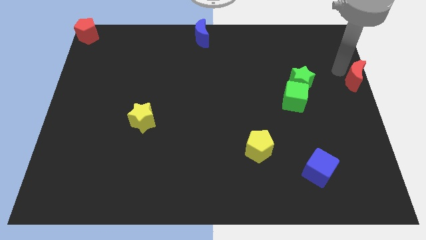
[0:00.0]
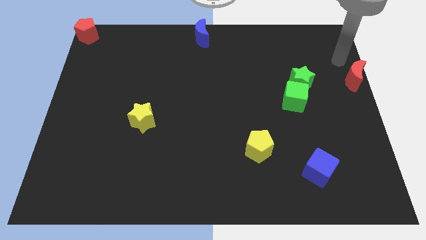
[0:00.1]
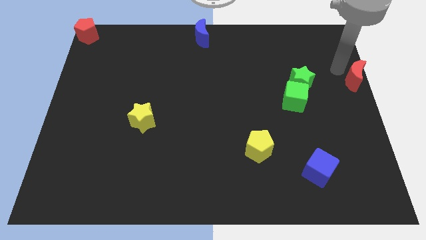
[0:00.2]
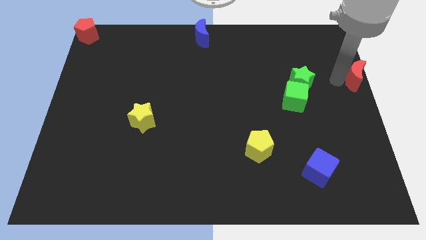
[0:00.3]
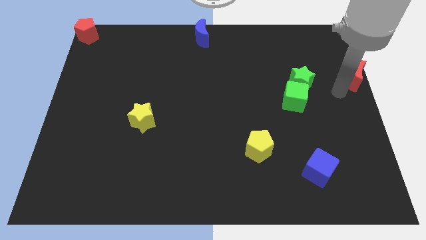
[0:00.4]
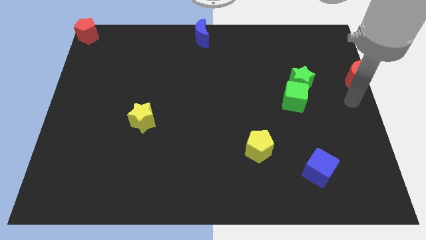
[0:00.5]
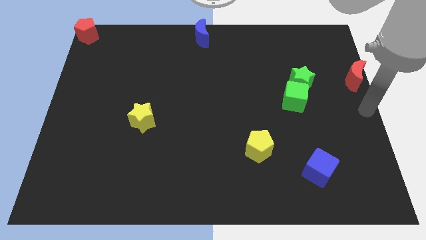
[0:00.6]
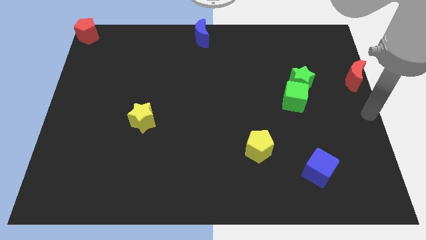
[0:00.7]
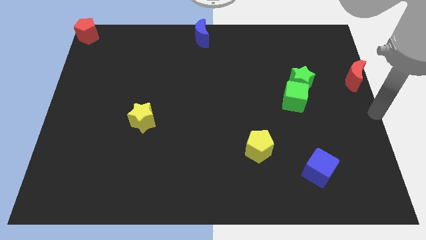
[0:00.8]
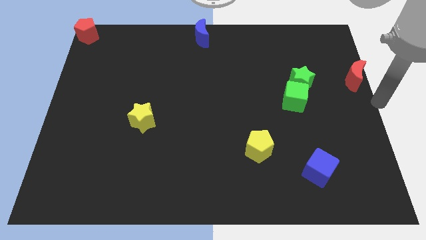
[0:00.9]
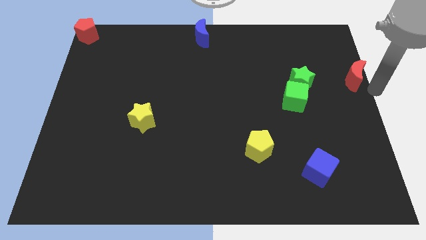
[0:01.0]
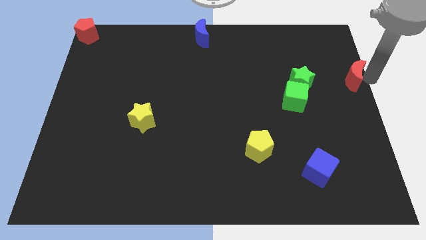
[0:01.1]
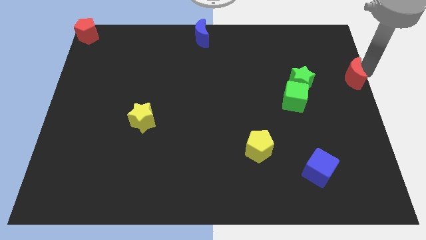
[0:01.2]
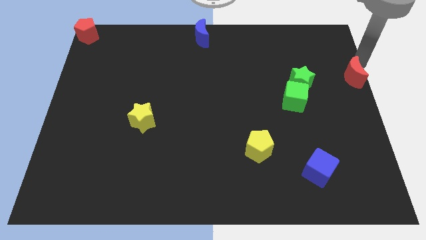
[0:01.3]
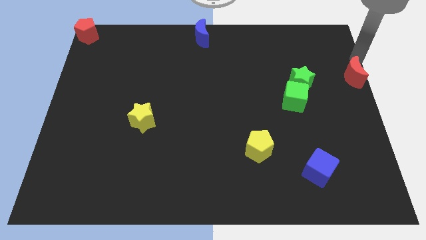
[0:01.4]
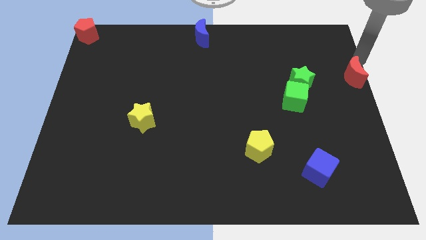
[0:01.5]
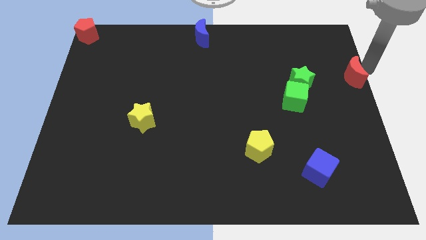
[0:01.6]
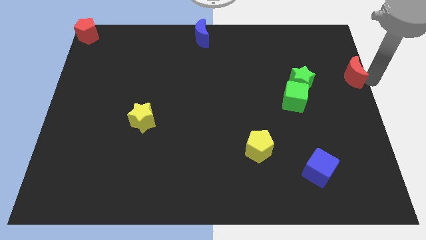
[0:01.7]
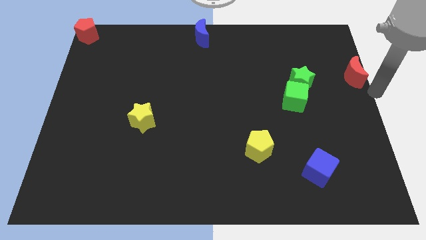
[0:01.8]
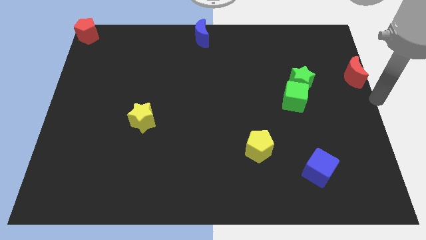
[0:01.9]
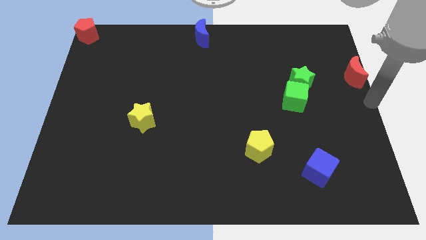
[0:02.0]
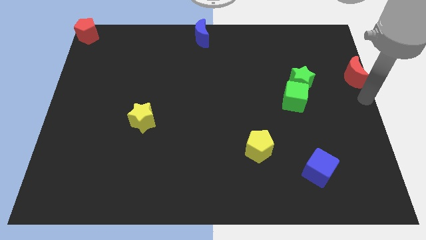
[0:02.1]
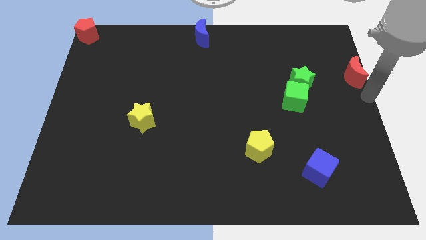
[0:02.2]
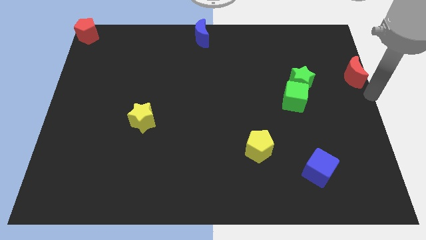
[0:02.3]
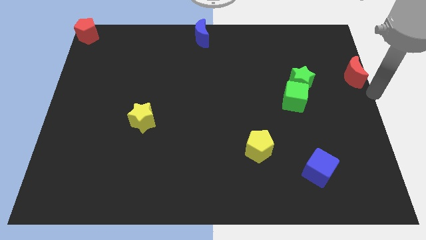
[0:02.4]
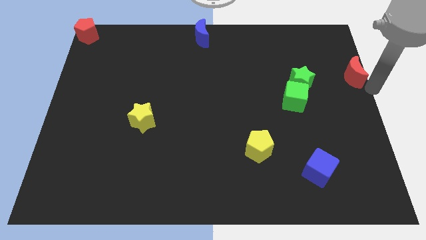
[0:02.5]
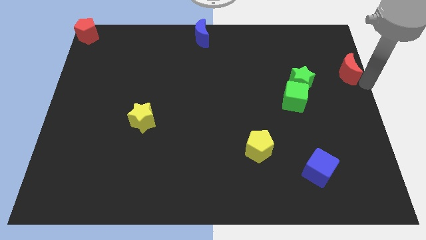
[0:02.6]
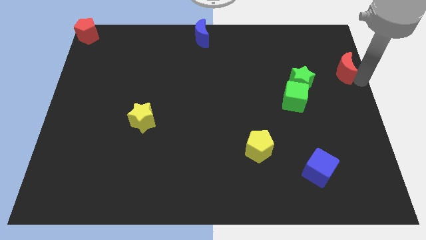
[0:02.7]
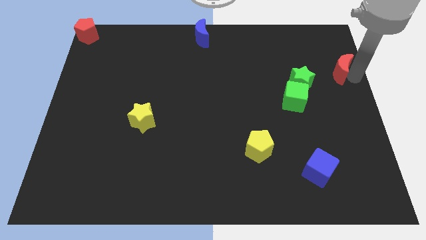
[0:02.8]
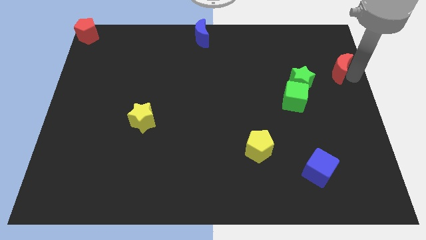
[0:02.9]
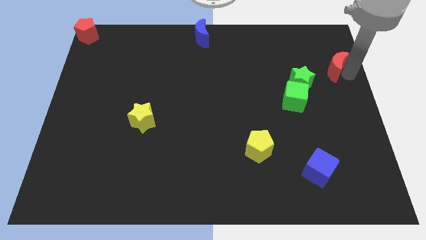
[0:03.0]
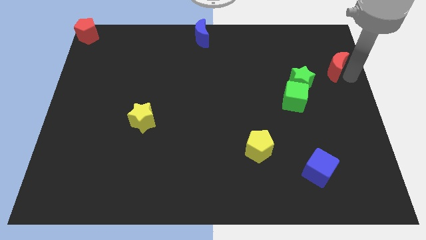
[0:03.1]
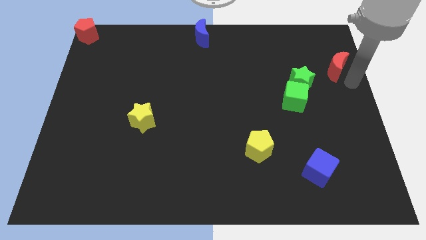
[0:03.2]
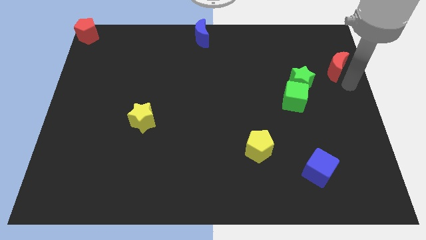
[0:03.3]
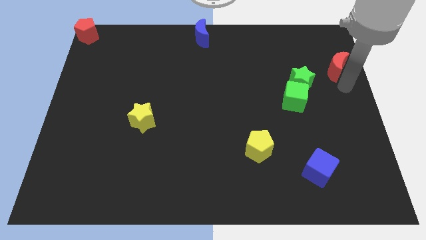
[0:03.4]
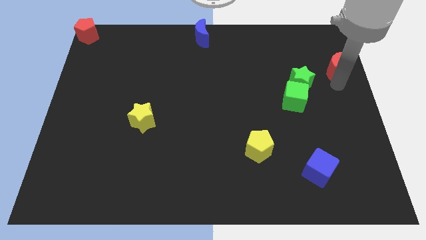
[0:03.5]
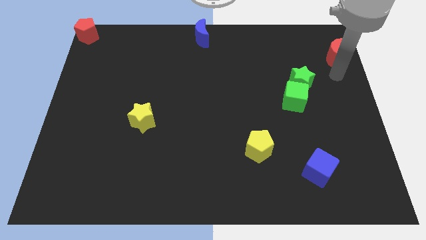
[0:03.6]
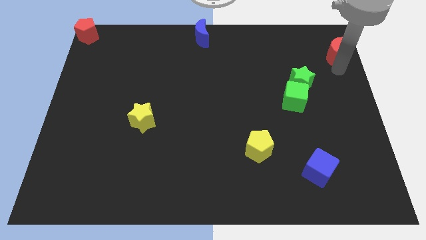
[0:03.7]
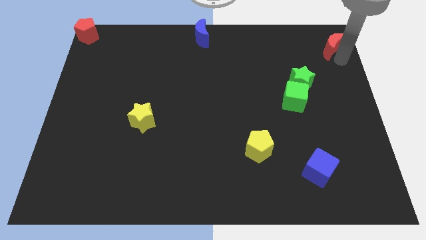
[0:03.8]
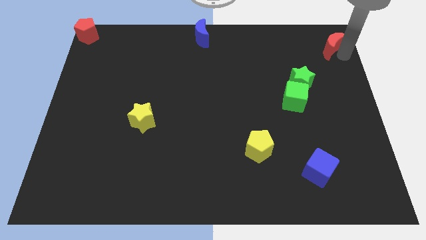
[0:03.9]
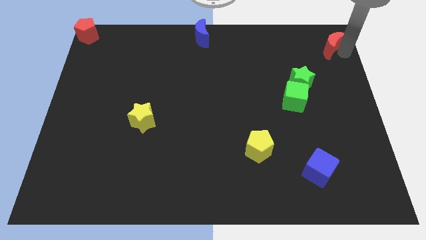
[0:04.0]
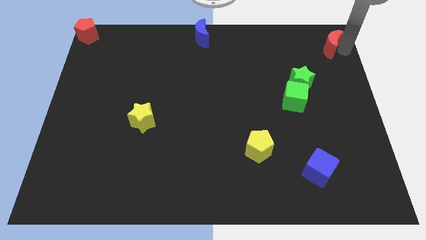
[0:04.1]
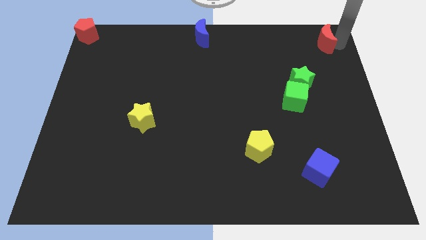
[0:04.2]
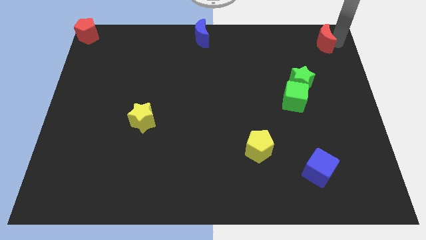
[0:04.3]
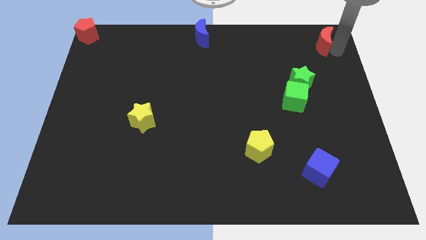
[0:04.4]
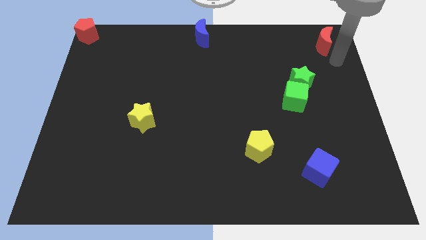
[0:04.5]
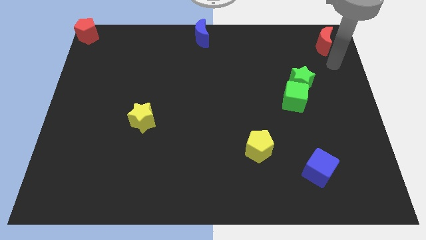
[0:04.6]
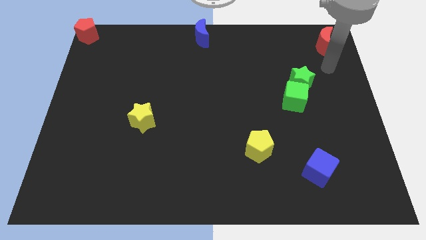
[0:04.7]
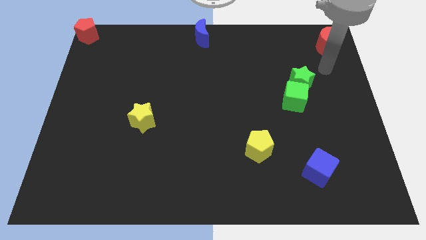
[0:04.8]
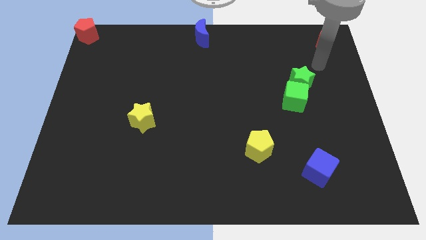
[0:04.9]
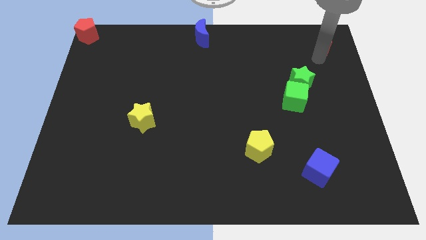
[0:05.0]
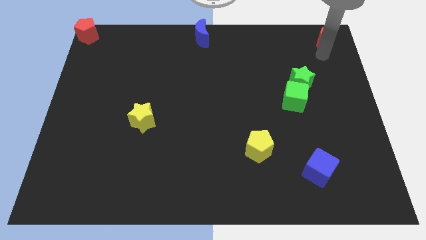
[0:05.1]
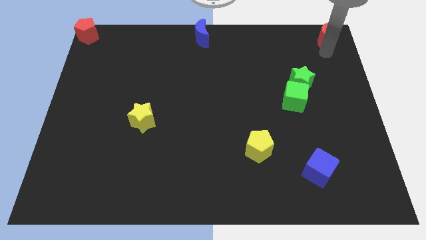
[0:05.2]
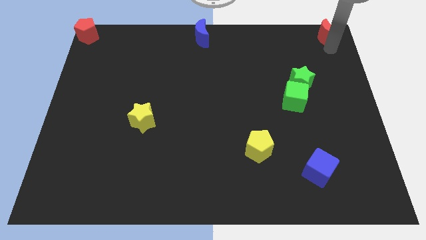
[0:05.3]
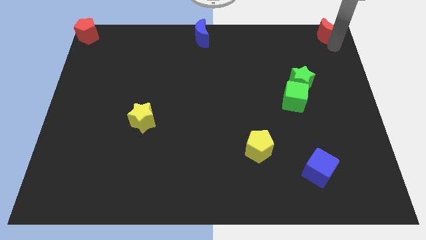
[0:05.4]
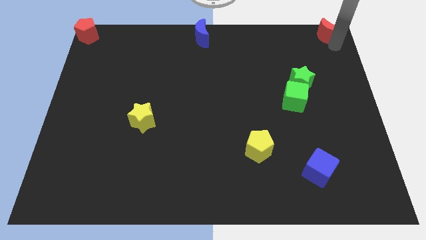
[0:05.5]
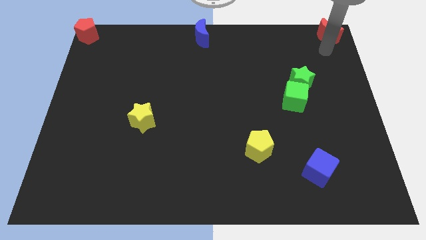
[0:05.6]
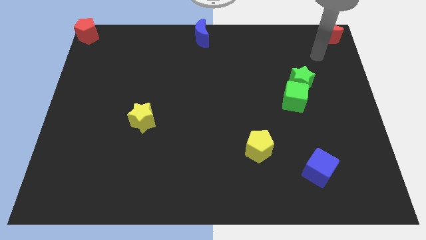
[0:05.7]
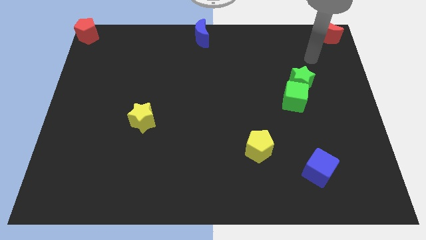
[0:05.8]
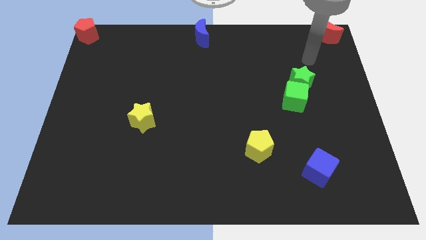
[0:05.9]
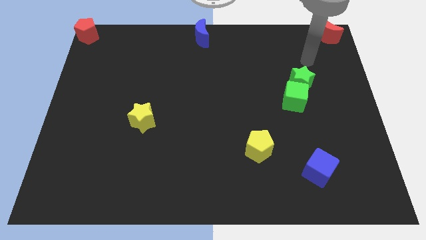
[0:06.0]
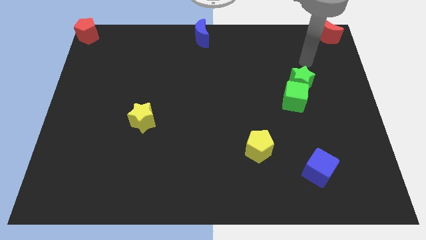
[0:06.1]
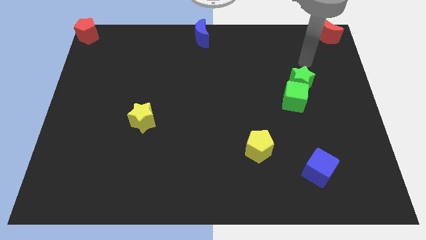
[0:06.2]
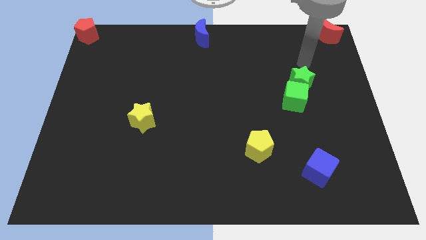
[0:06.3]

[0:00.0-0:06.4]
push red crescent towards the top right corner

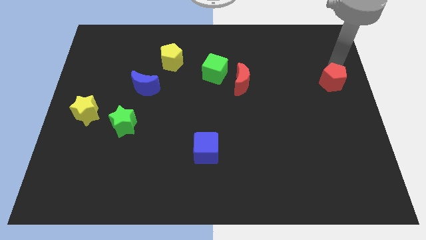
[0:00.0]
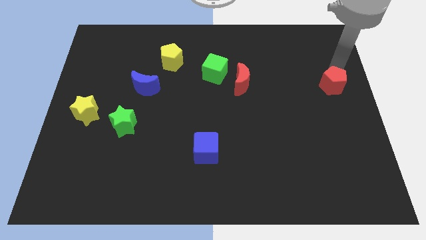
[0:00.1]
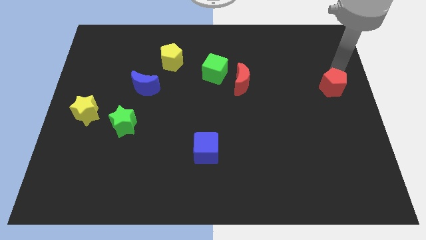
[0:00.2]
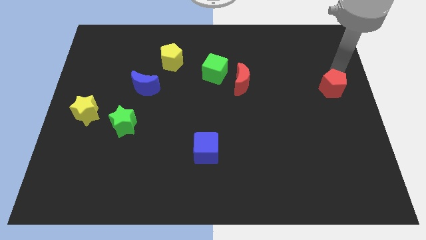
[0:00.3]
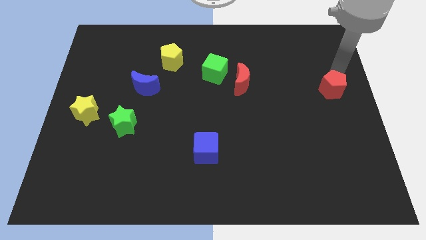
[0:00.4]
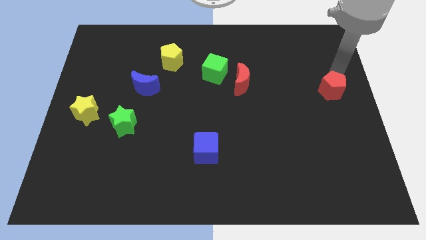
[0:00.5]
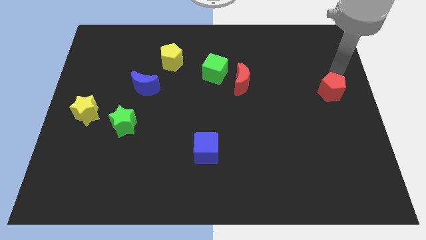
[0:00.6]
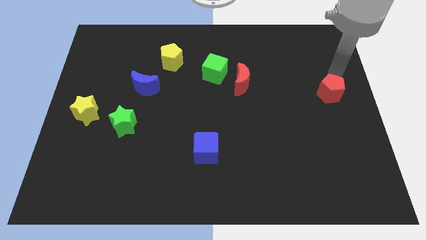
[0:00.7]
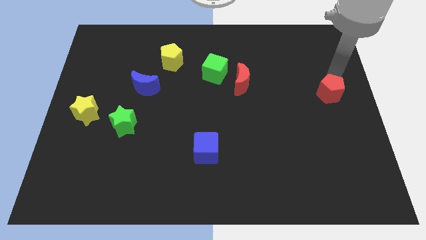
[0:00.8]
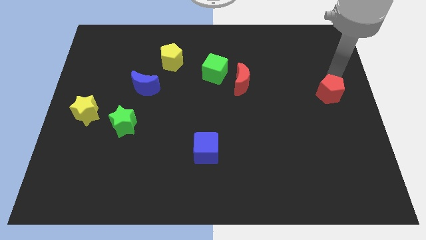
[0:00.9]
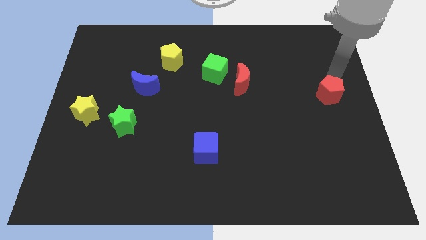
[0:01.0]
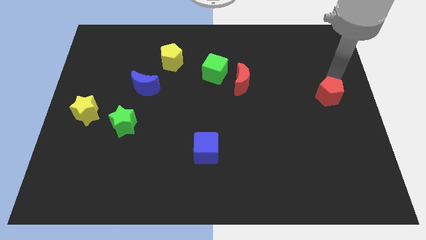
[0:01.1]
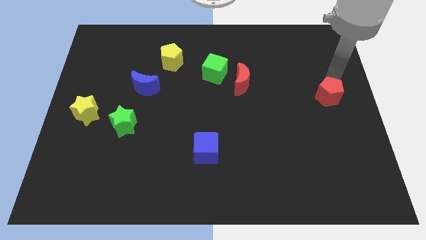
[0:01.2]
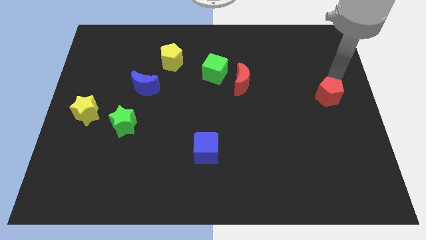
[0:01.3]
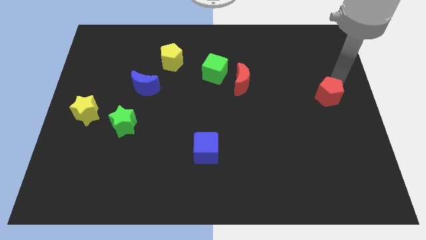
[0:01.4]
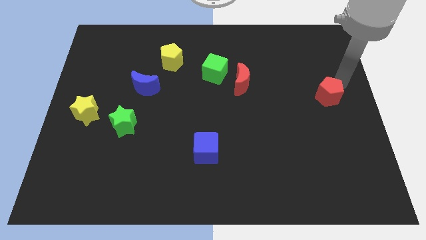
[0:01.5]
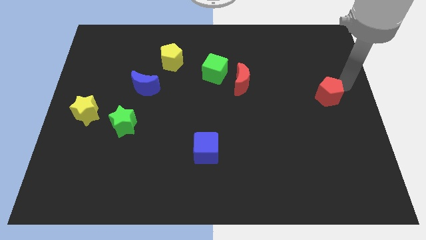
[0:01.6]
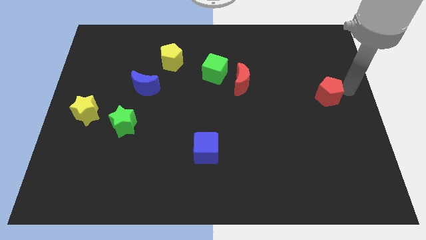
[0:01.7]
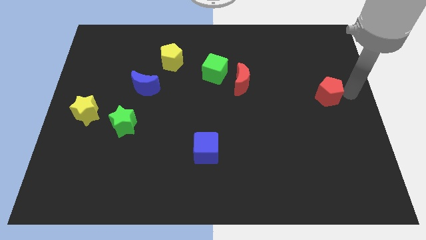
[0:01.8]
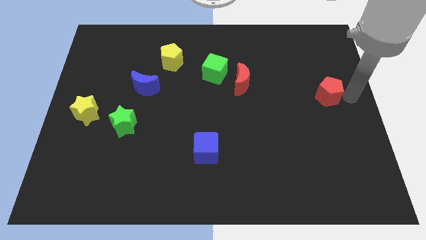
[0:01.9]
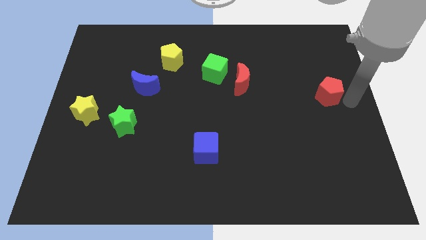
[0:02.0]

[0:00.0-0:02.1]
push the red pentagon slightly downwards

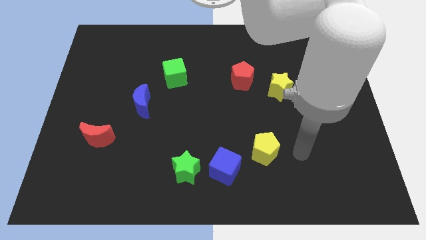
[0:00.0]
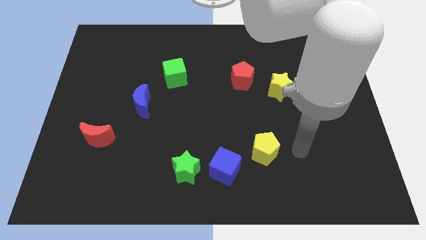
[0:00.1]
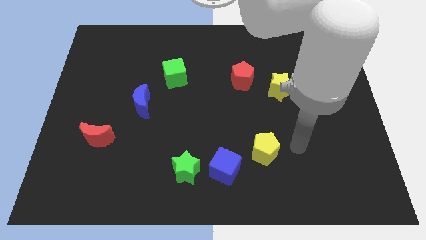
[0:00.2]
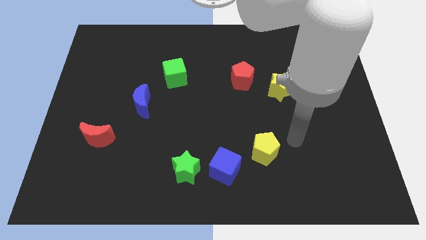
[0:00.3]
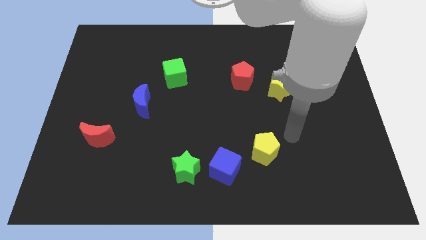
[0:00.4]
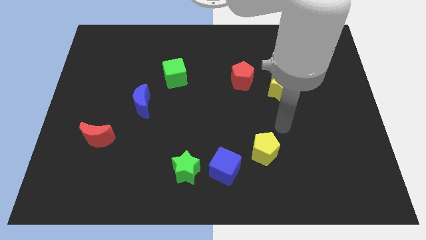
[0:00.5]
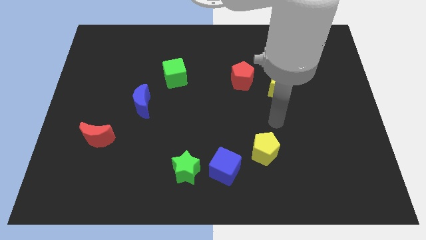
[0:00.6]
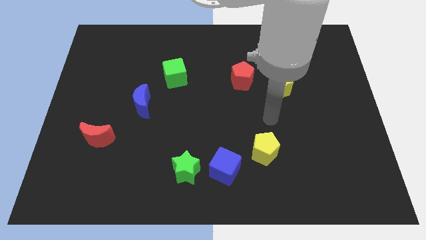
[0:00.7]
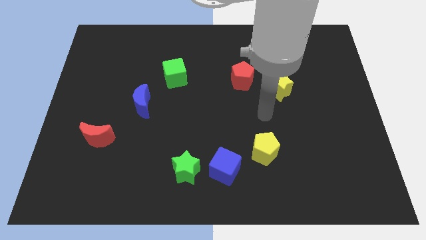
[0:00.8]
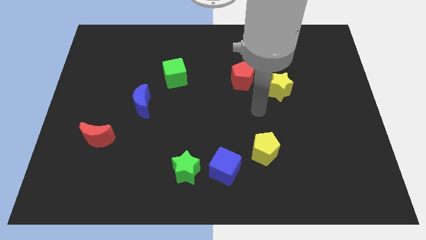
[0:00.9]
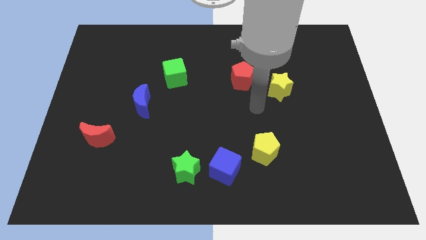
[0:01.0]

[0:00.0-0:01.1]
place the arm below the red pentagon and yellow pentagon
